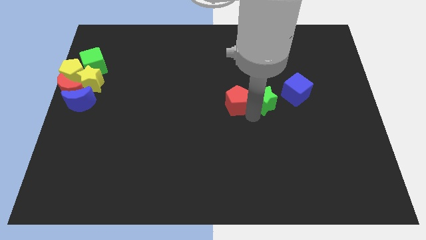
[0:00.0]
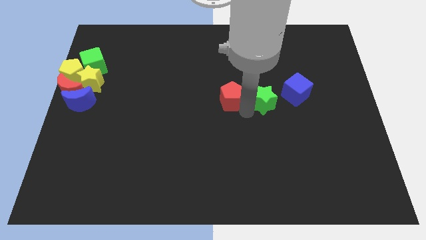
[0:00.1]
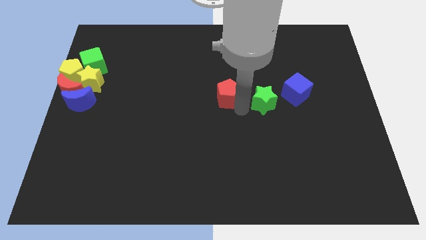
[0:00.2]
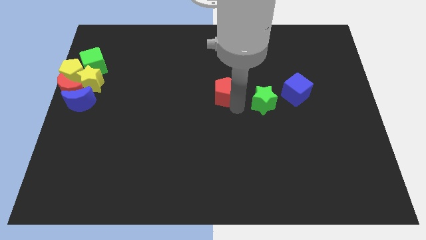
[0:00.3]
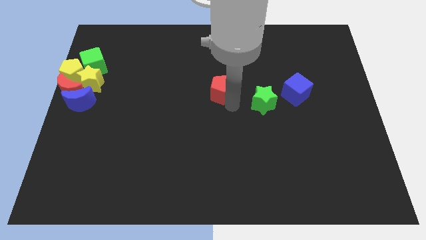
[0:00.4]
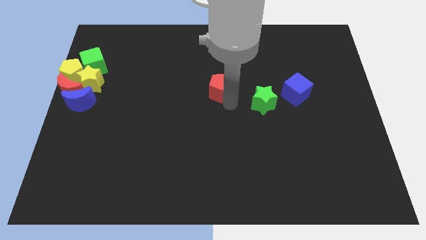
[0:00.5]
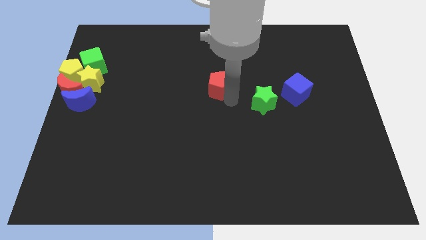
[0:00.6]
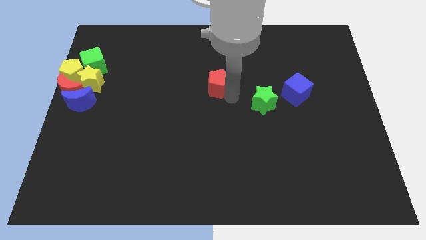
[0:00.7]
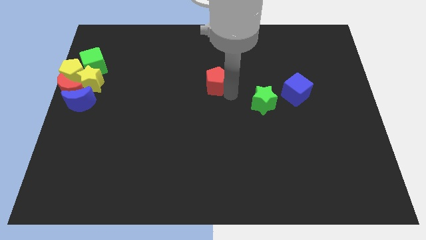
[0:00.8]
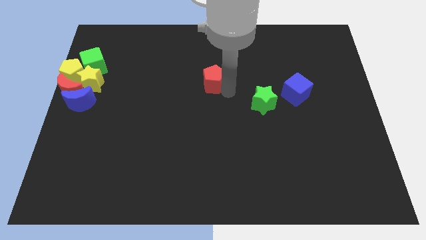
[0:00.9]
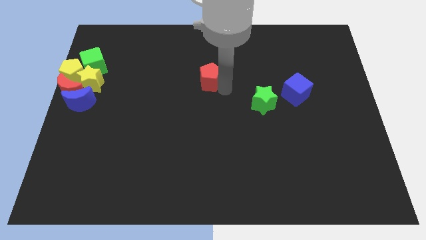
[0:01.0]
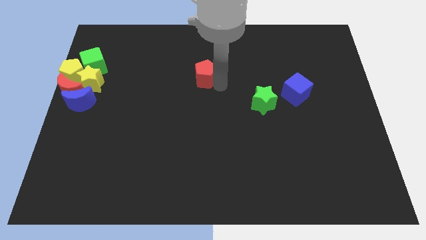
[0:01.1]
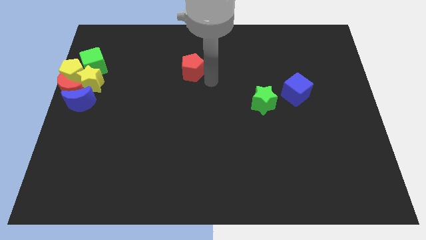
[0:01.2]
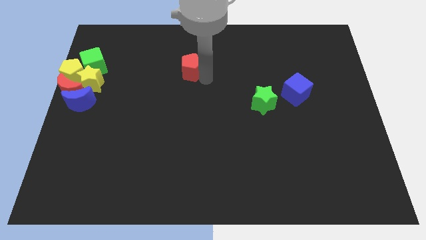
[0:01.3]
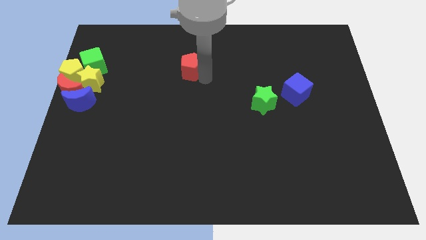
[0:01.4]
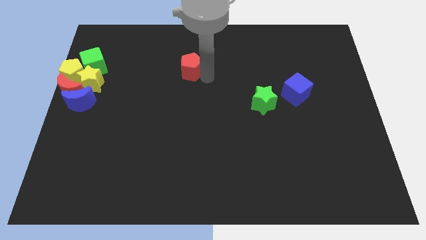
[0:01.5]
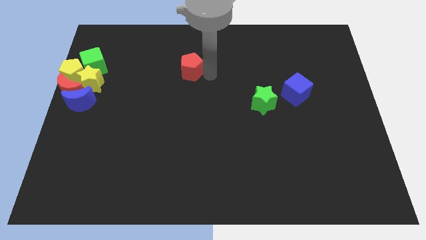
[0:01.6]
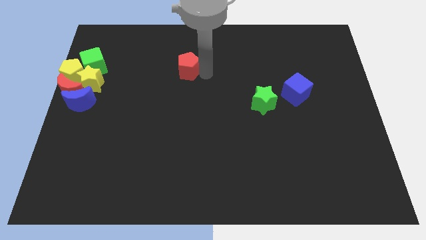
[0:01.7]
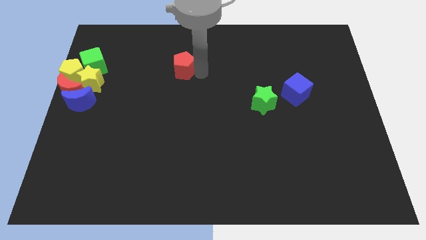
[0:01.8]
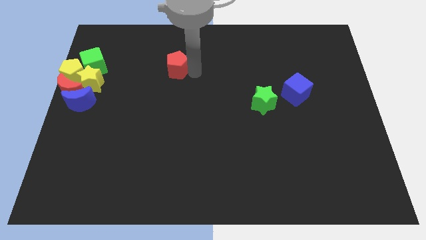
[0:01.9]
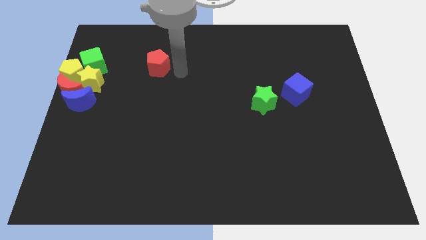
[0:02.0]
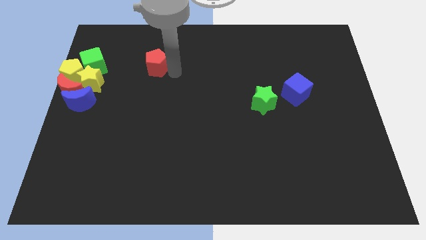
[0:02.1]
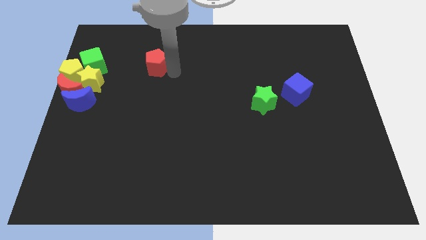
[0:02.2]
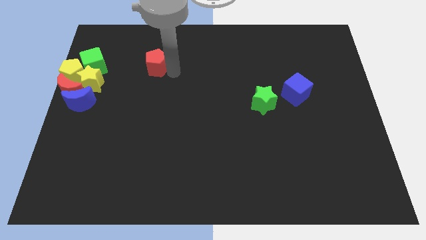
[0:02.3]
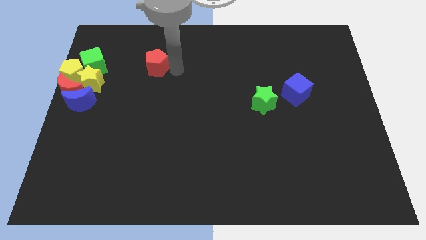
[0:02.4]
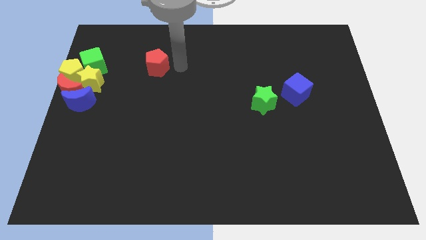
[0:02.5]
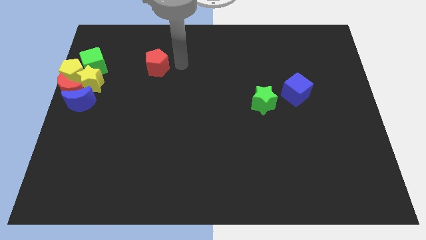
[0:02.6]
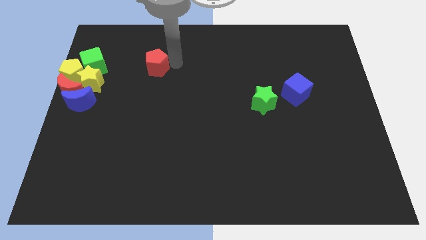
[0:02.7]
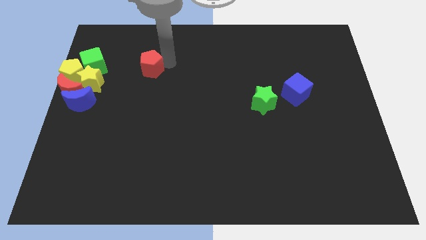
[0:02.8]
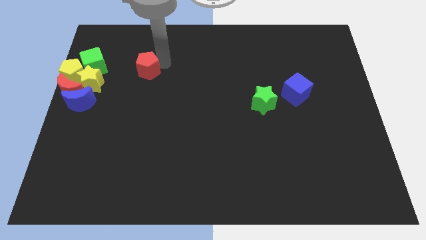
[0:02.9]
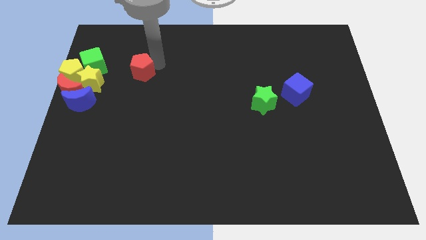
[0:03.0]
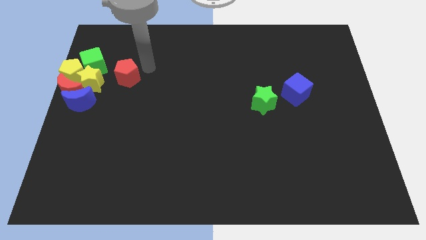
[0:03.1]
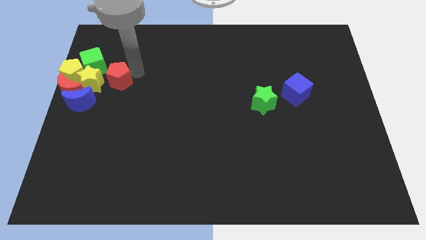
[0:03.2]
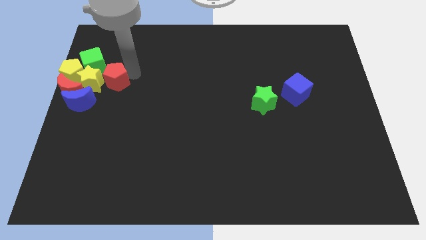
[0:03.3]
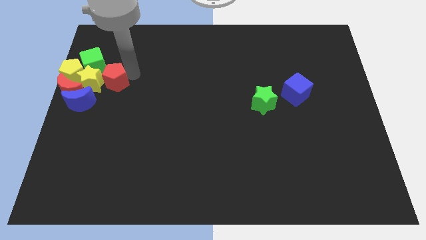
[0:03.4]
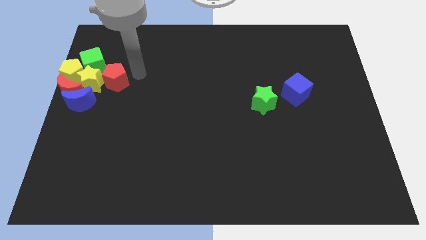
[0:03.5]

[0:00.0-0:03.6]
move the red pentagon to the right of yellow star

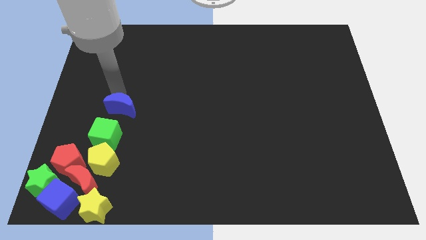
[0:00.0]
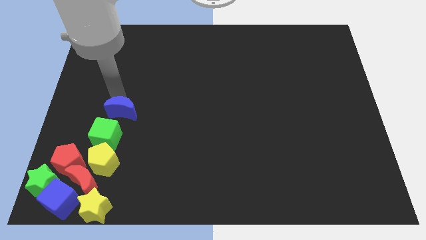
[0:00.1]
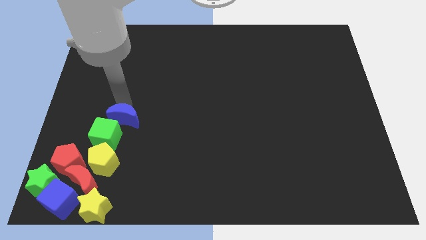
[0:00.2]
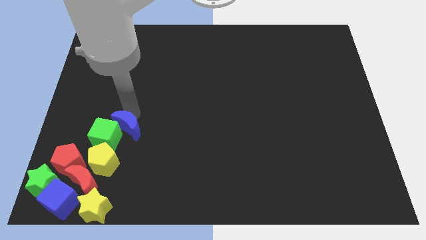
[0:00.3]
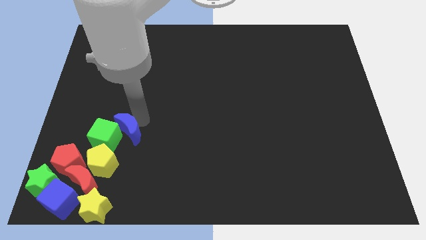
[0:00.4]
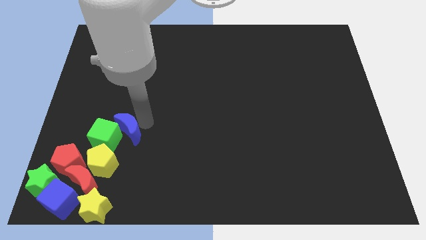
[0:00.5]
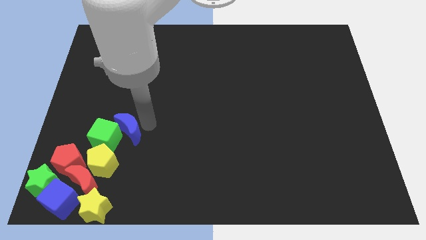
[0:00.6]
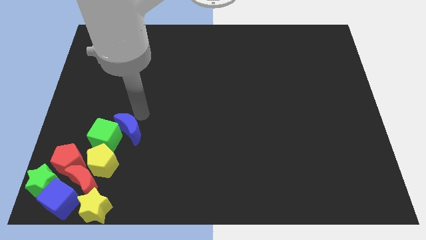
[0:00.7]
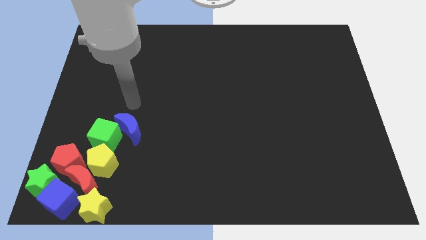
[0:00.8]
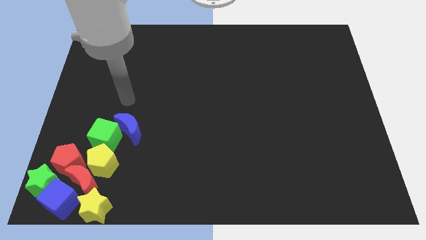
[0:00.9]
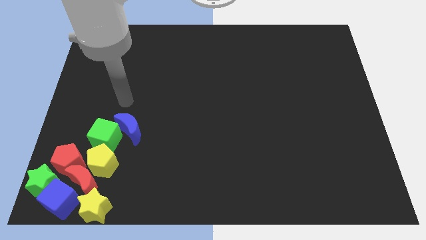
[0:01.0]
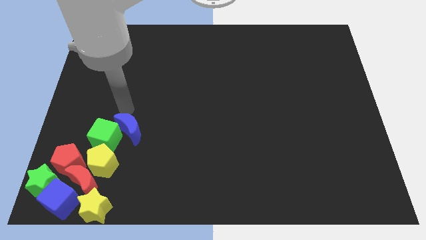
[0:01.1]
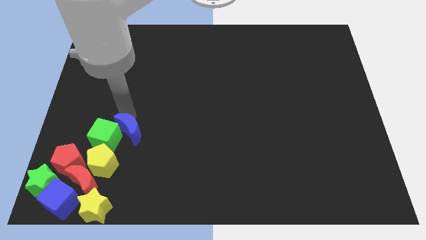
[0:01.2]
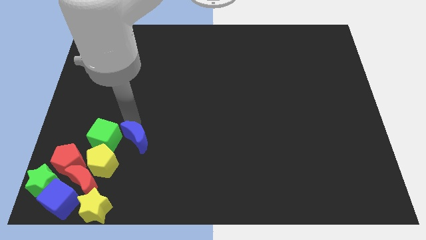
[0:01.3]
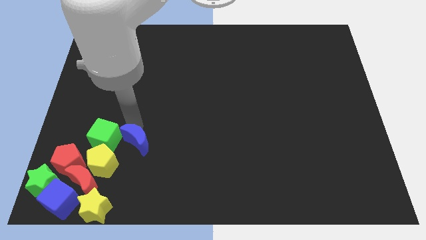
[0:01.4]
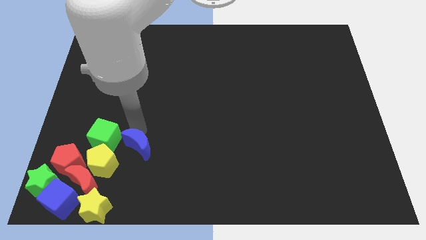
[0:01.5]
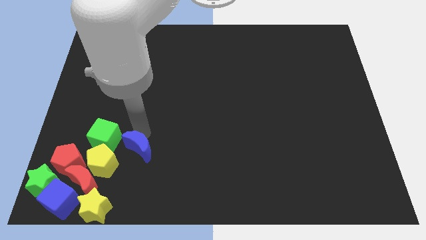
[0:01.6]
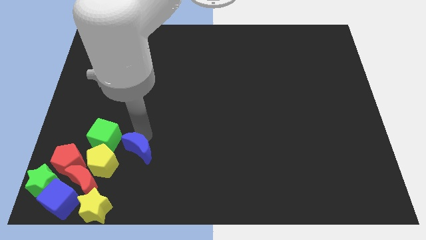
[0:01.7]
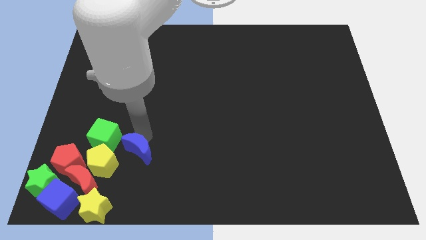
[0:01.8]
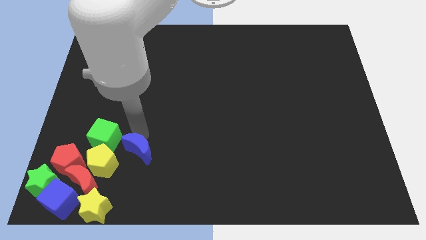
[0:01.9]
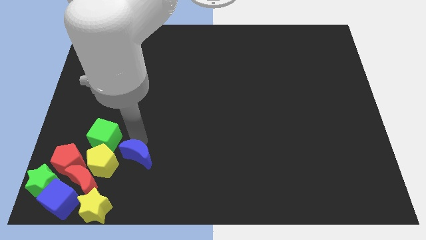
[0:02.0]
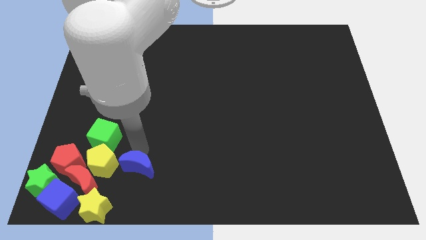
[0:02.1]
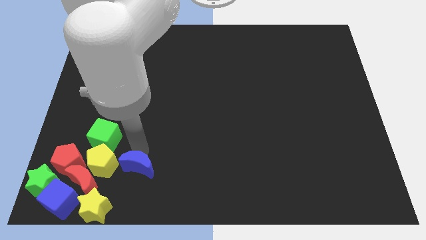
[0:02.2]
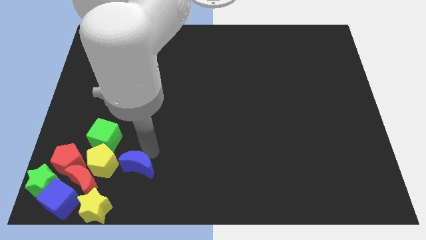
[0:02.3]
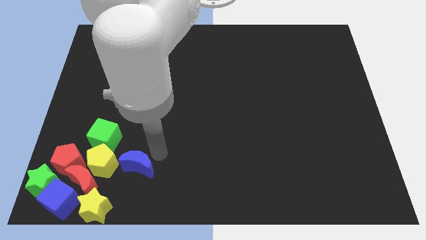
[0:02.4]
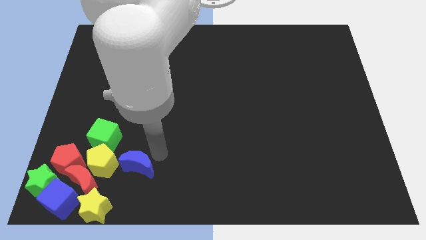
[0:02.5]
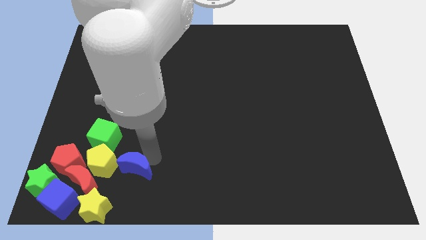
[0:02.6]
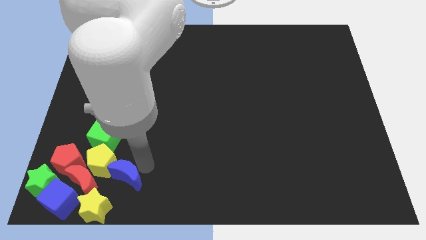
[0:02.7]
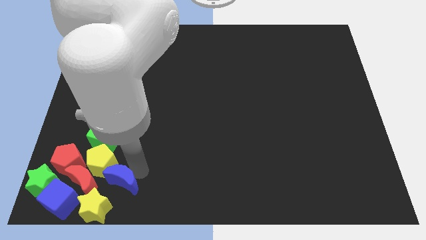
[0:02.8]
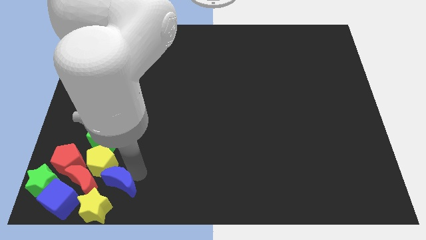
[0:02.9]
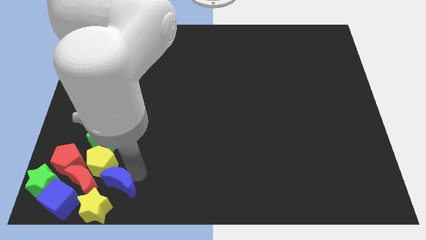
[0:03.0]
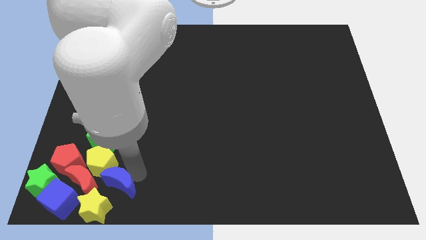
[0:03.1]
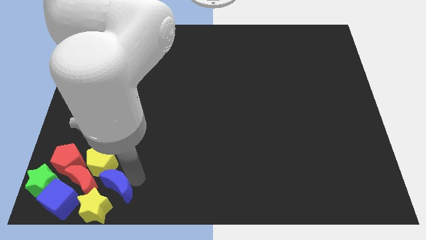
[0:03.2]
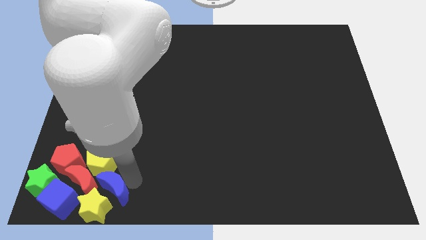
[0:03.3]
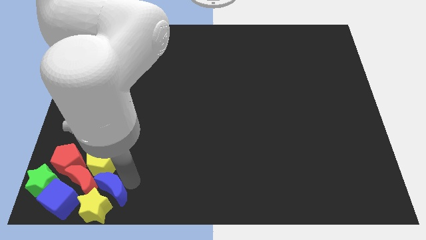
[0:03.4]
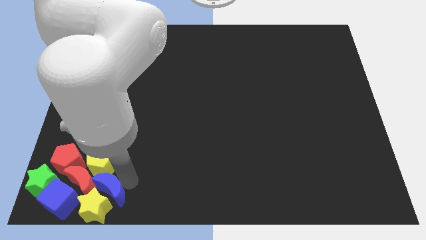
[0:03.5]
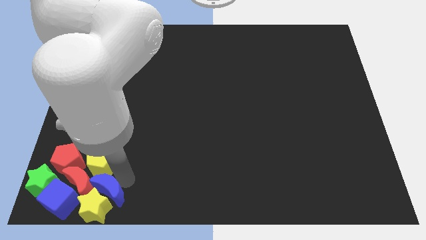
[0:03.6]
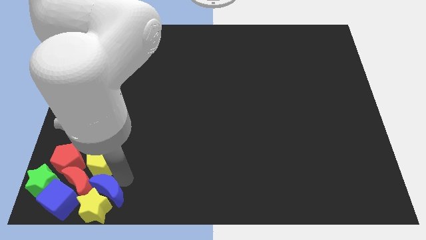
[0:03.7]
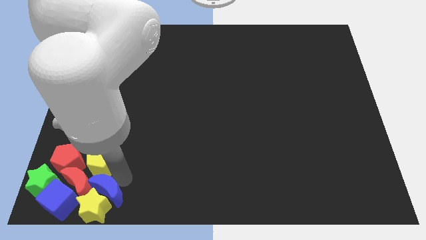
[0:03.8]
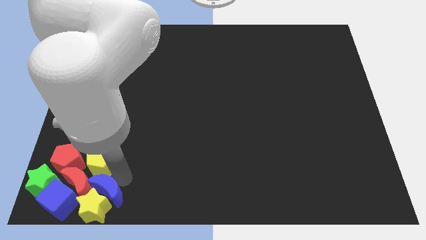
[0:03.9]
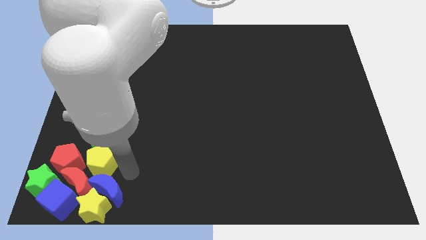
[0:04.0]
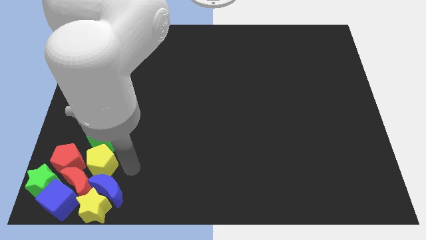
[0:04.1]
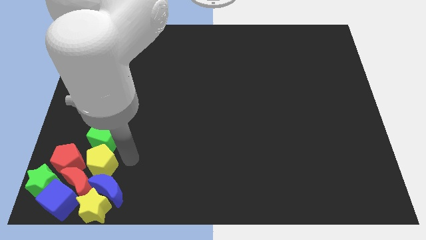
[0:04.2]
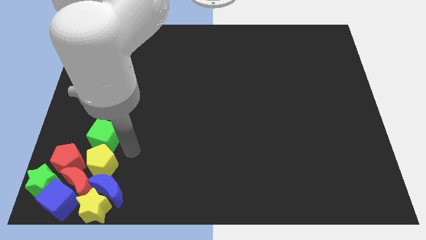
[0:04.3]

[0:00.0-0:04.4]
place blue crescent beside red crescent

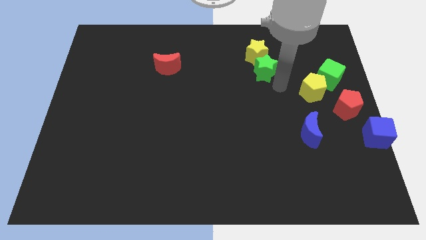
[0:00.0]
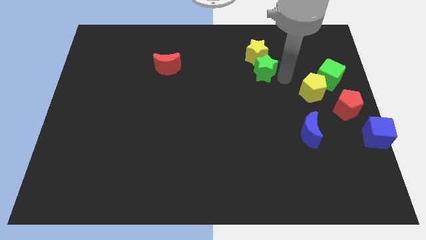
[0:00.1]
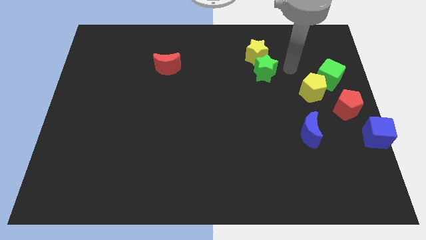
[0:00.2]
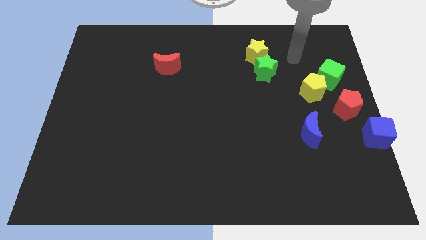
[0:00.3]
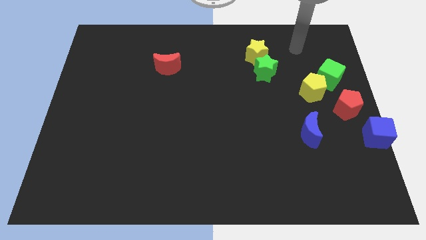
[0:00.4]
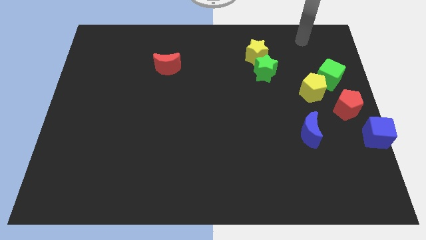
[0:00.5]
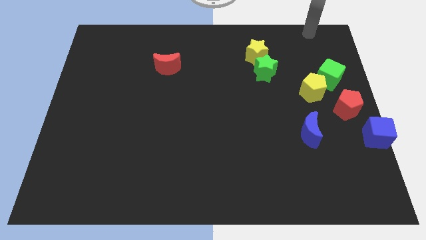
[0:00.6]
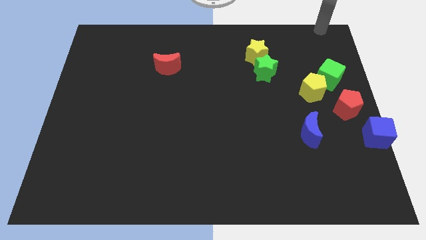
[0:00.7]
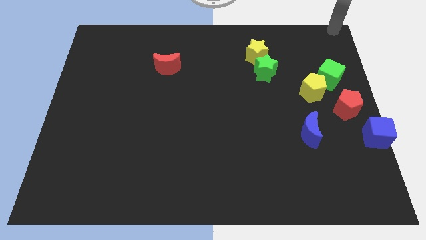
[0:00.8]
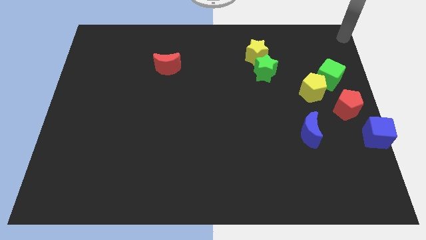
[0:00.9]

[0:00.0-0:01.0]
point your arm at the top right corner of the board
